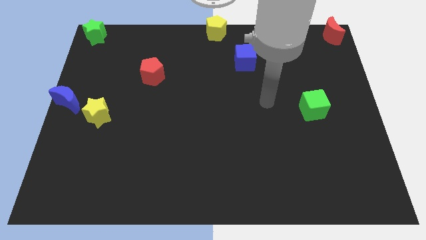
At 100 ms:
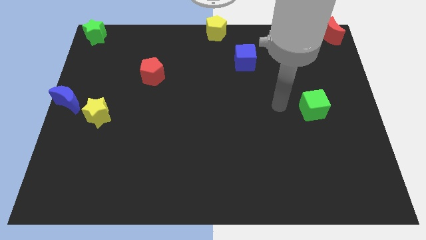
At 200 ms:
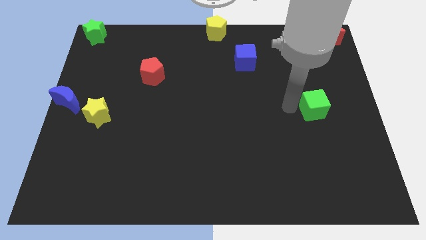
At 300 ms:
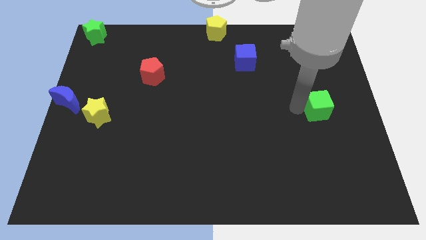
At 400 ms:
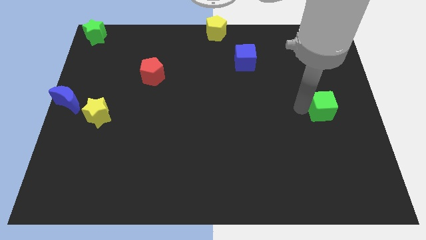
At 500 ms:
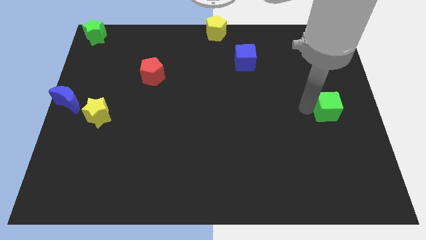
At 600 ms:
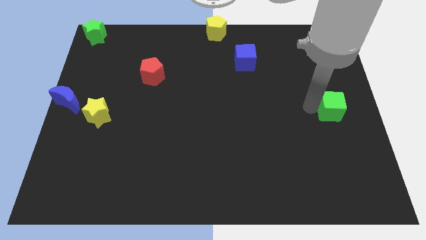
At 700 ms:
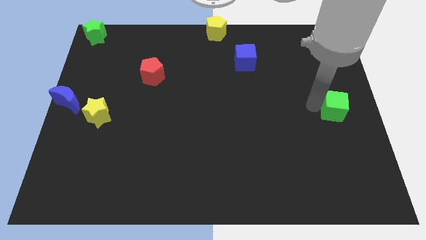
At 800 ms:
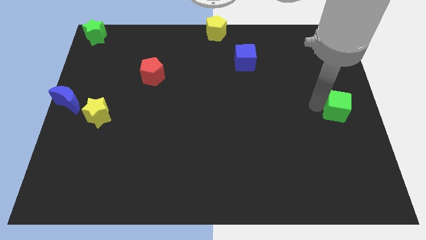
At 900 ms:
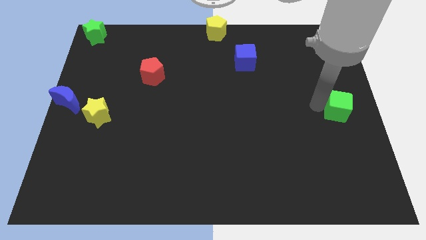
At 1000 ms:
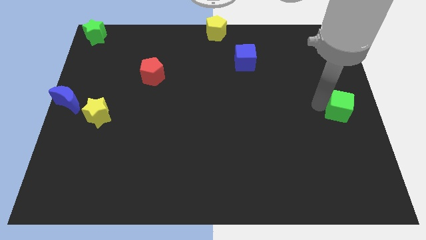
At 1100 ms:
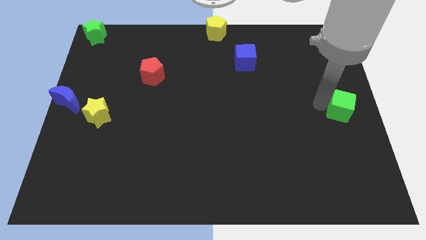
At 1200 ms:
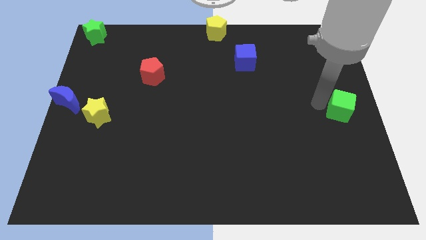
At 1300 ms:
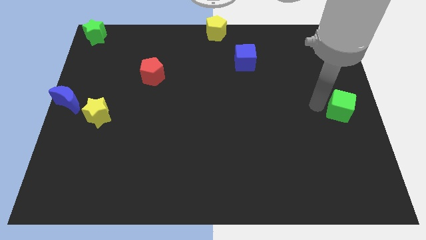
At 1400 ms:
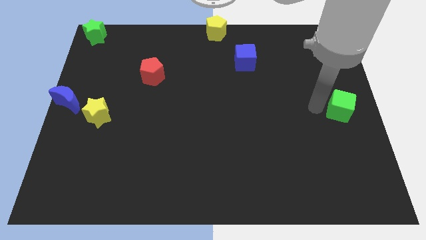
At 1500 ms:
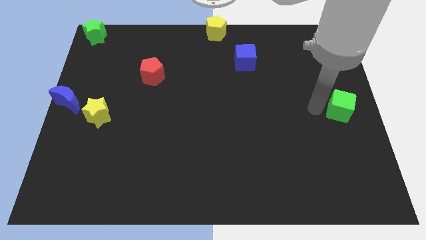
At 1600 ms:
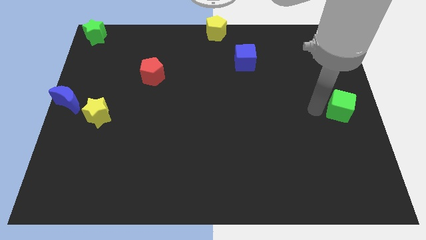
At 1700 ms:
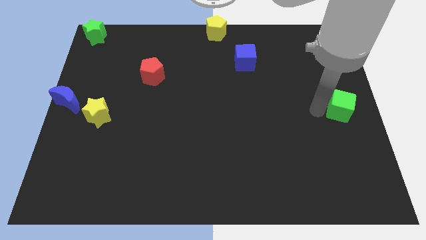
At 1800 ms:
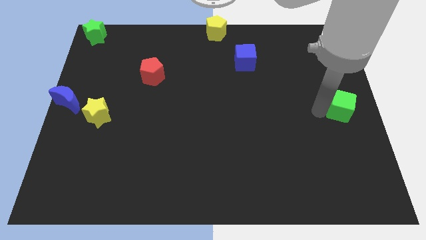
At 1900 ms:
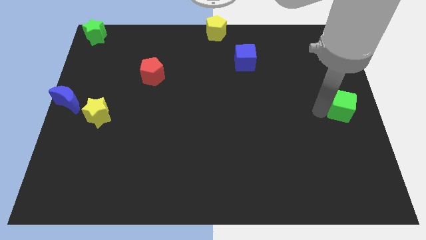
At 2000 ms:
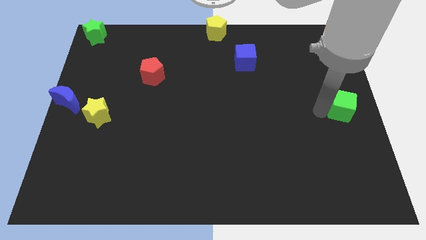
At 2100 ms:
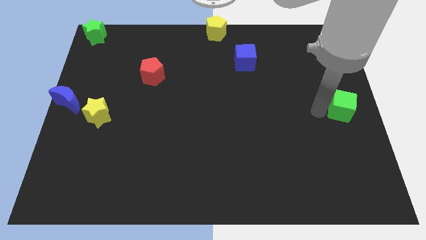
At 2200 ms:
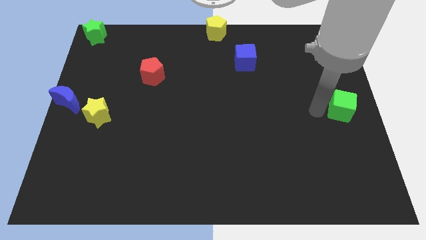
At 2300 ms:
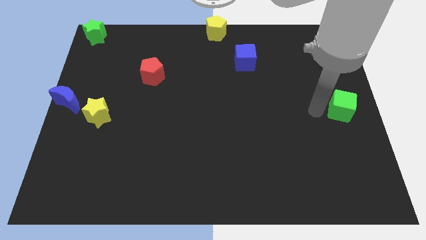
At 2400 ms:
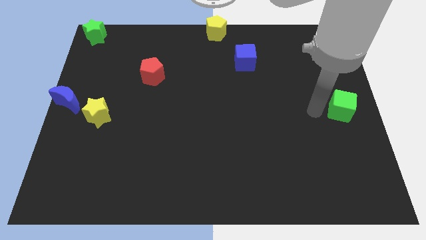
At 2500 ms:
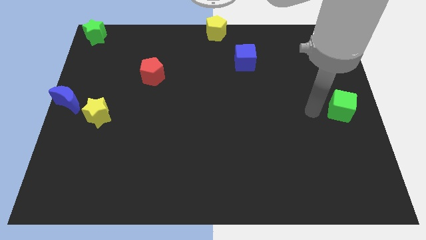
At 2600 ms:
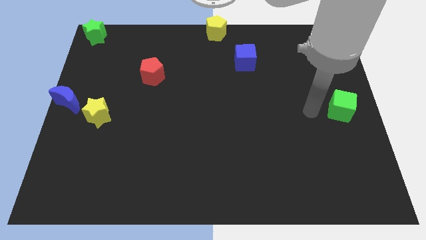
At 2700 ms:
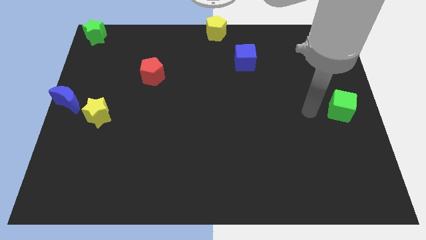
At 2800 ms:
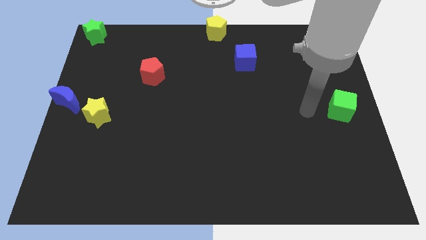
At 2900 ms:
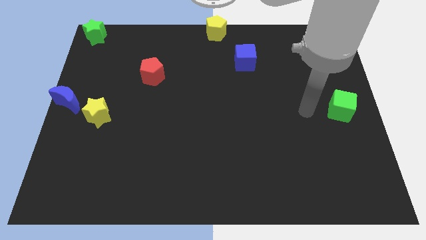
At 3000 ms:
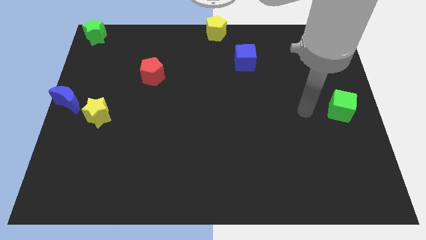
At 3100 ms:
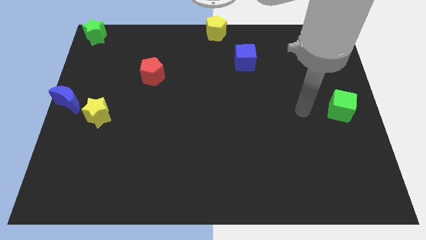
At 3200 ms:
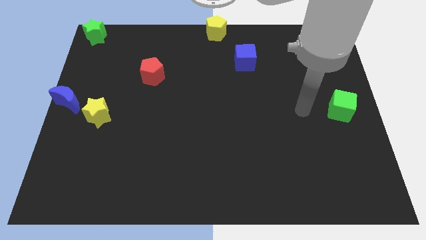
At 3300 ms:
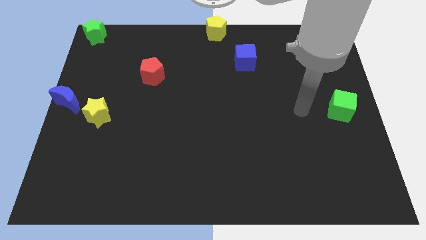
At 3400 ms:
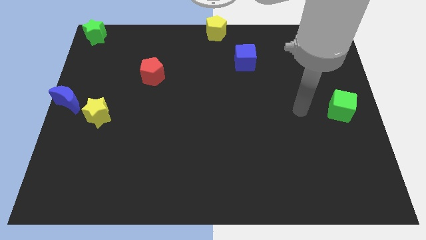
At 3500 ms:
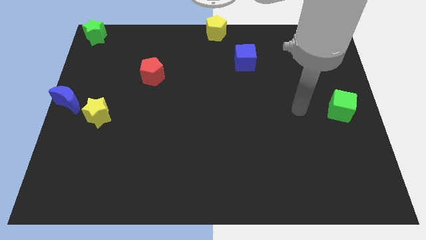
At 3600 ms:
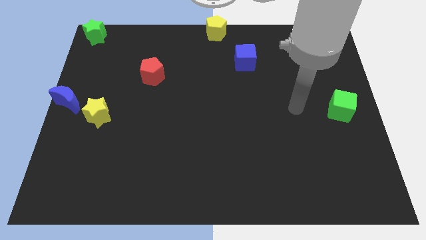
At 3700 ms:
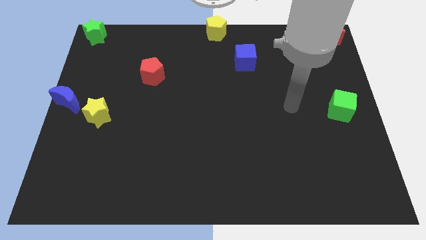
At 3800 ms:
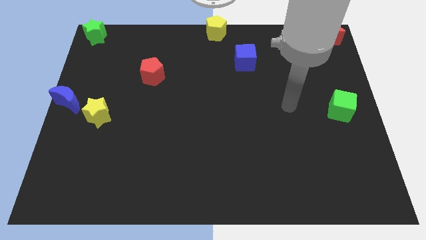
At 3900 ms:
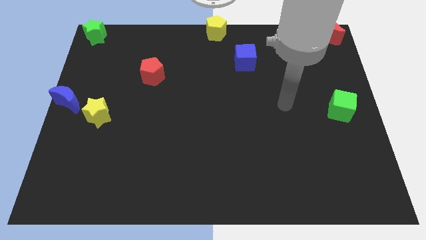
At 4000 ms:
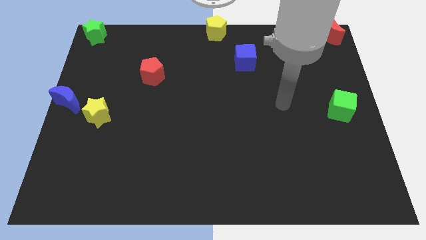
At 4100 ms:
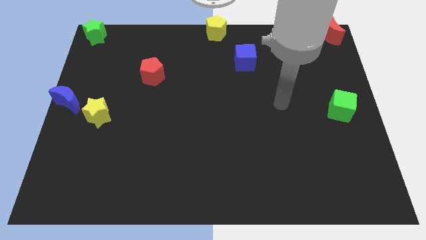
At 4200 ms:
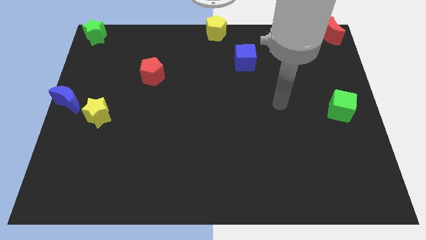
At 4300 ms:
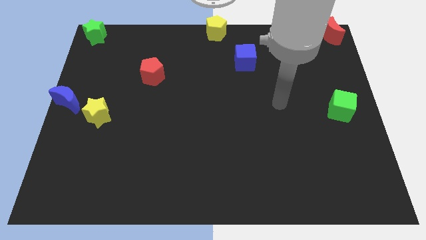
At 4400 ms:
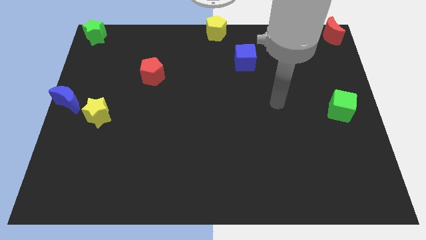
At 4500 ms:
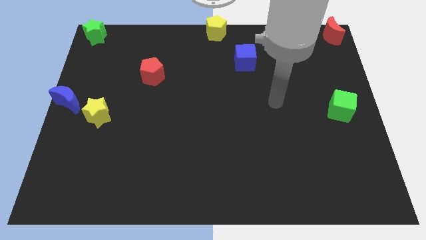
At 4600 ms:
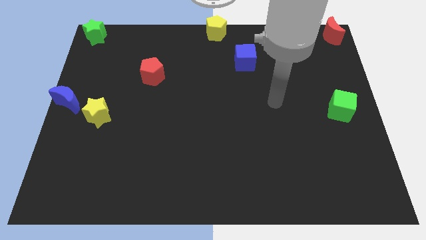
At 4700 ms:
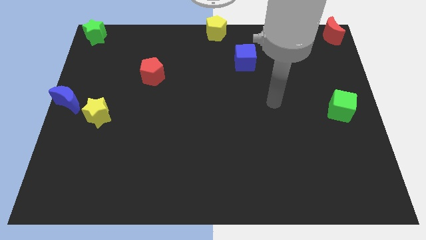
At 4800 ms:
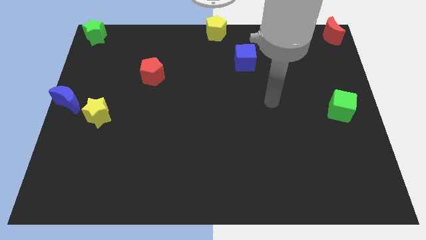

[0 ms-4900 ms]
place the green cube to the right center of the board

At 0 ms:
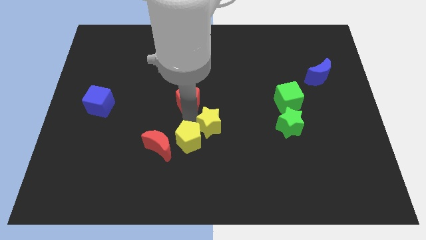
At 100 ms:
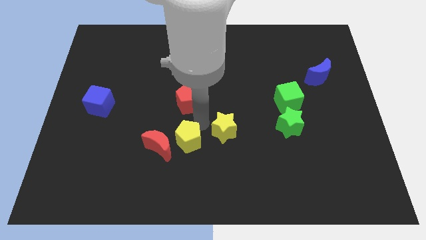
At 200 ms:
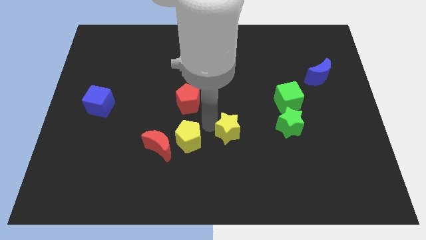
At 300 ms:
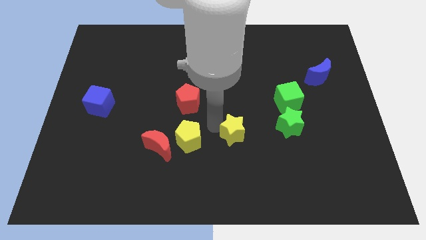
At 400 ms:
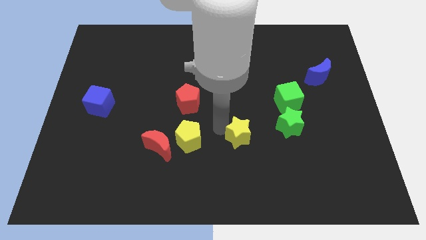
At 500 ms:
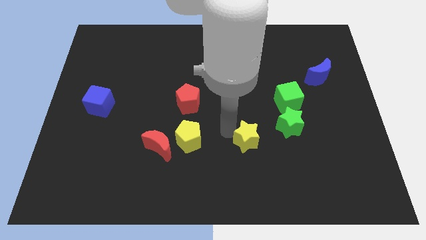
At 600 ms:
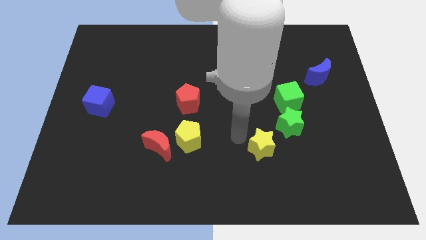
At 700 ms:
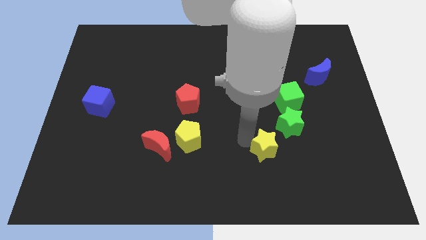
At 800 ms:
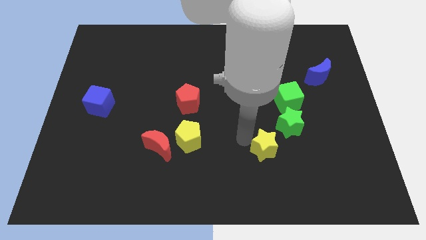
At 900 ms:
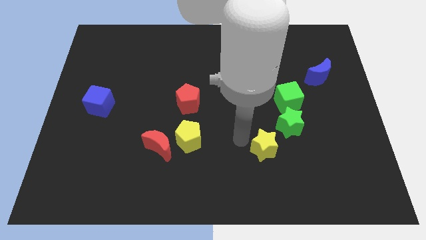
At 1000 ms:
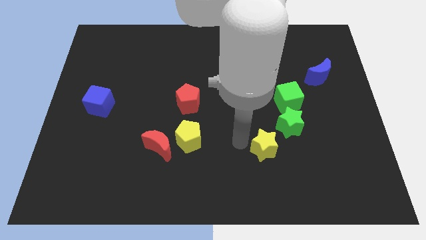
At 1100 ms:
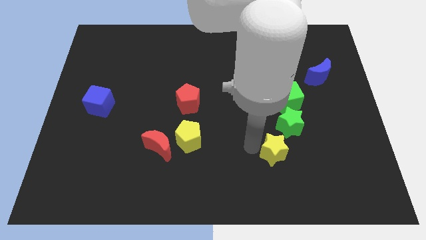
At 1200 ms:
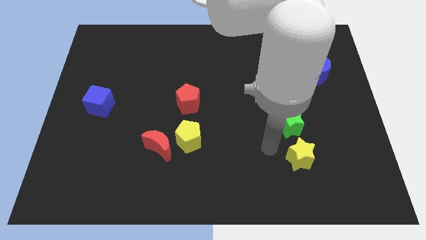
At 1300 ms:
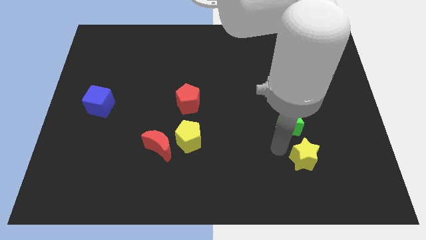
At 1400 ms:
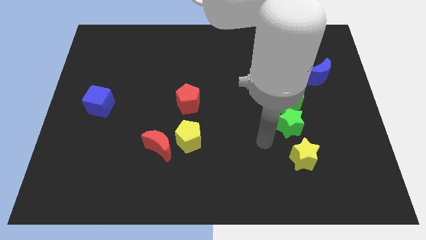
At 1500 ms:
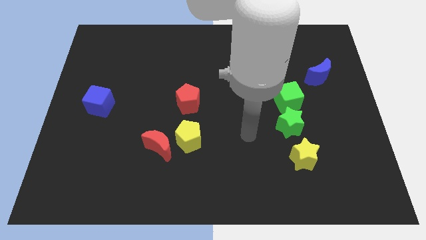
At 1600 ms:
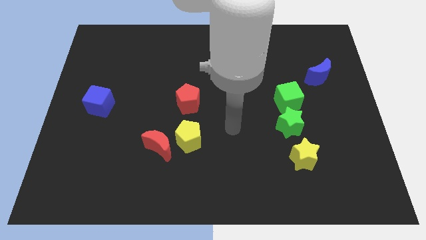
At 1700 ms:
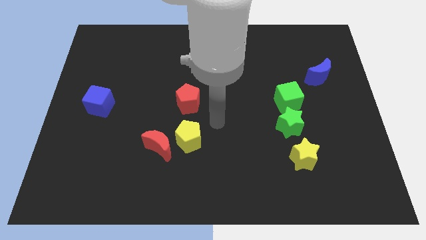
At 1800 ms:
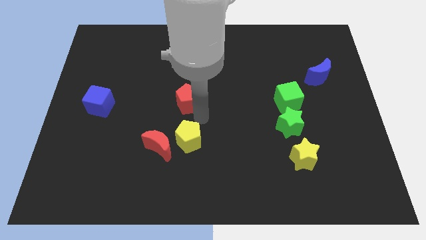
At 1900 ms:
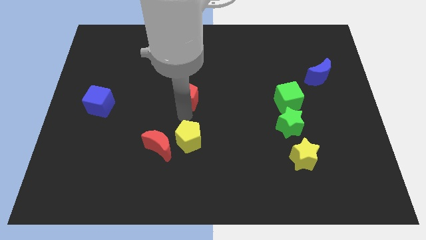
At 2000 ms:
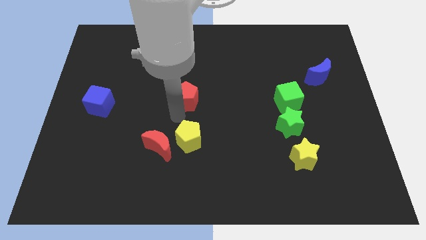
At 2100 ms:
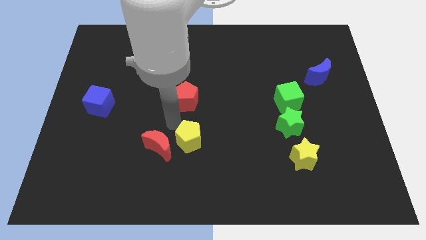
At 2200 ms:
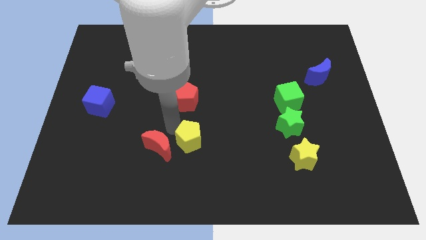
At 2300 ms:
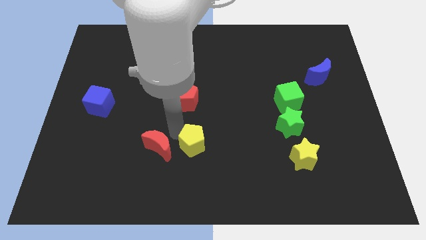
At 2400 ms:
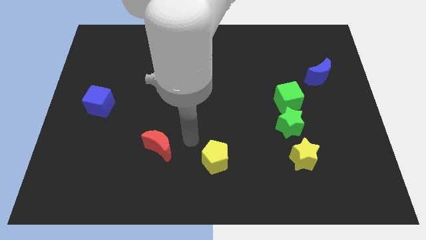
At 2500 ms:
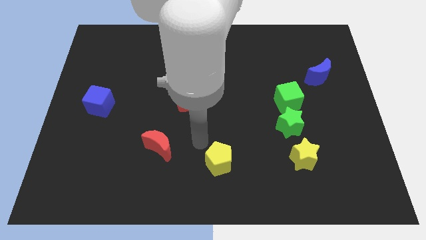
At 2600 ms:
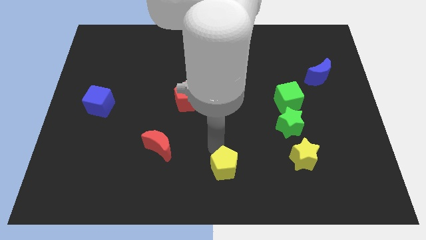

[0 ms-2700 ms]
move both the yellow blocks away from each other

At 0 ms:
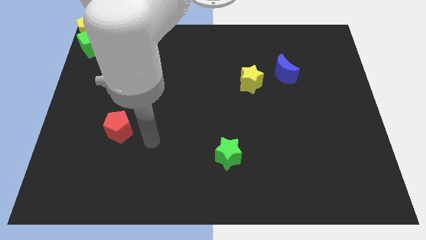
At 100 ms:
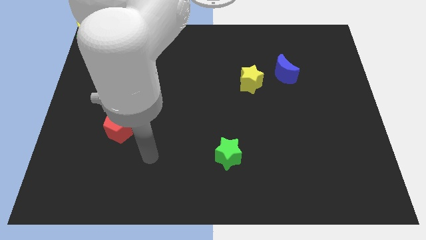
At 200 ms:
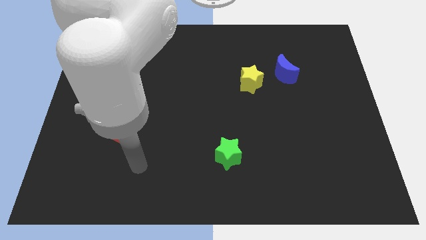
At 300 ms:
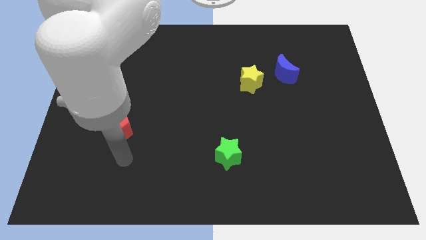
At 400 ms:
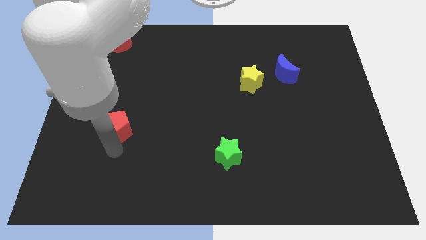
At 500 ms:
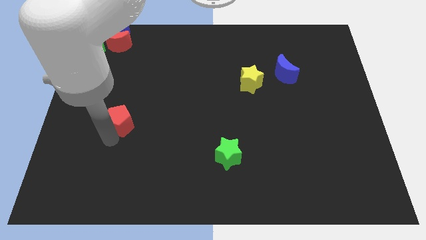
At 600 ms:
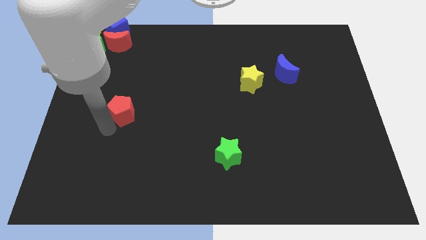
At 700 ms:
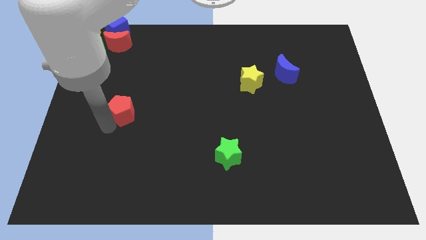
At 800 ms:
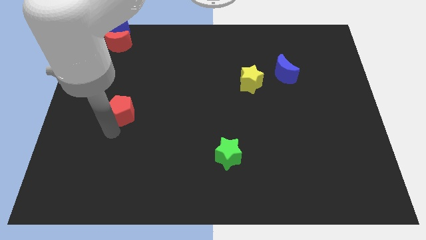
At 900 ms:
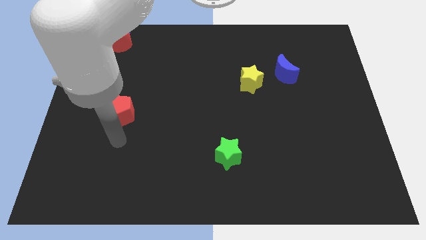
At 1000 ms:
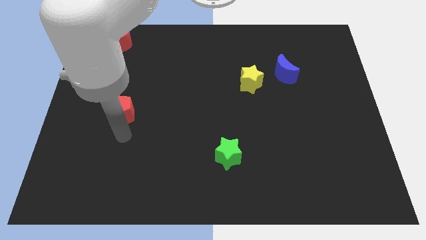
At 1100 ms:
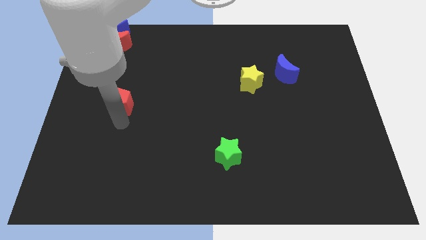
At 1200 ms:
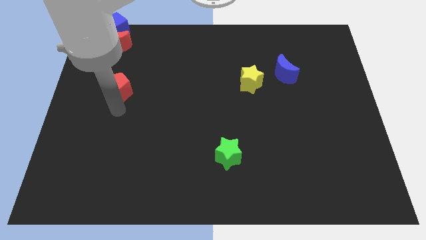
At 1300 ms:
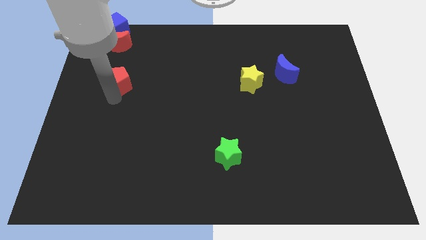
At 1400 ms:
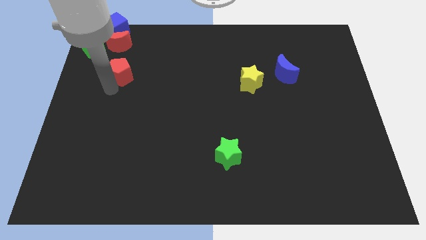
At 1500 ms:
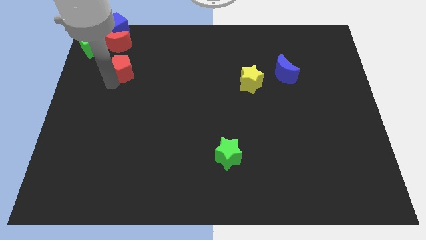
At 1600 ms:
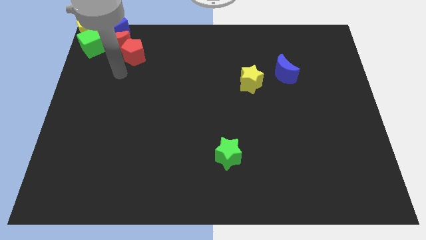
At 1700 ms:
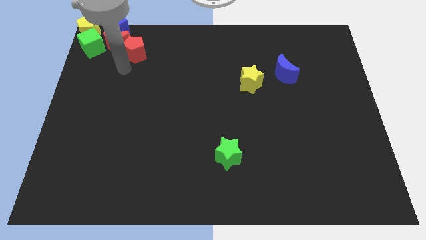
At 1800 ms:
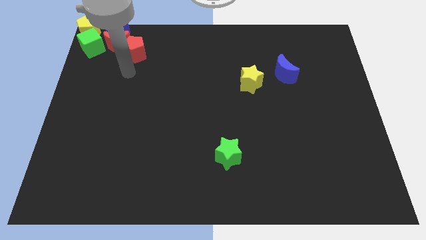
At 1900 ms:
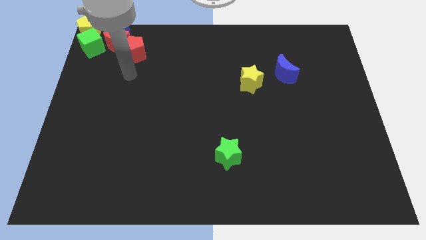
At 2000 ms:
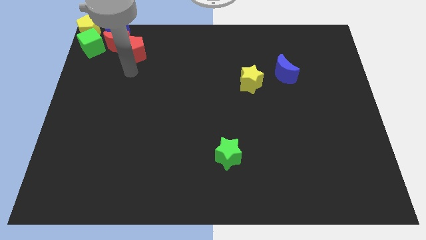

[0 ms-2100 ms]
move the red pentagon to the bottom side of the red moon
